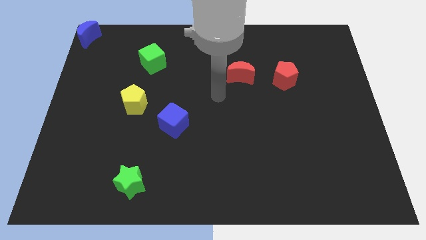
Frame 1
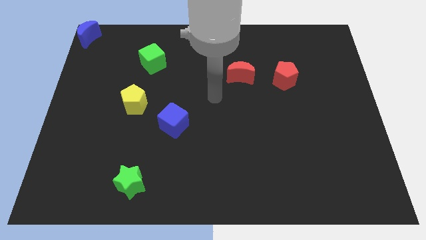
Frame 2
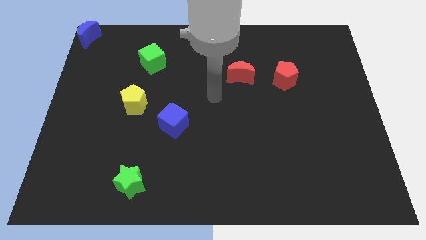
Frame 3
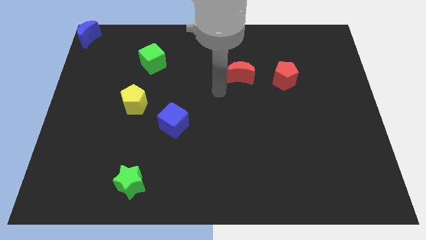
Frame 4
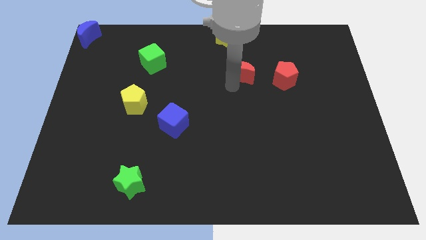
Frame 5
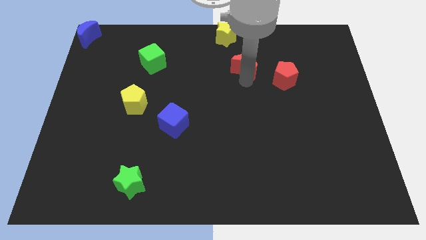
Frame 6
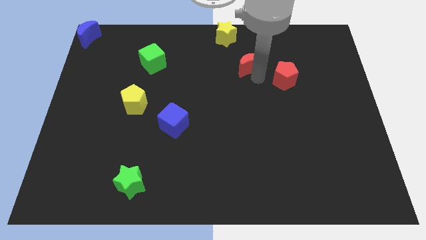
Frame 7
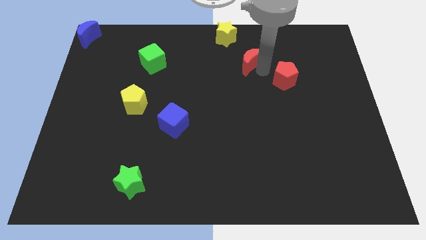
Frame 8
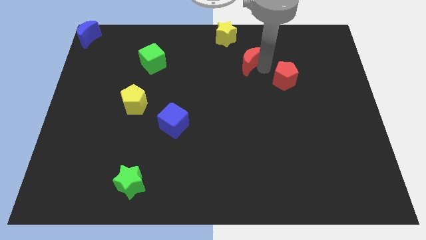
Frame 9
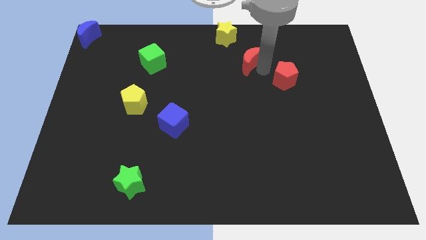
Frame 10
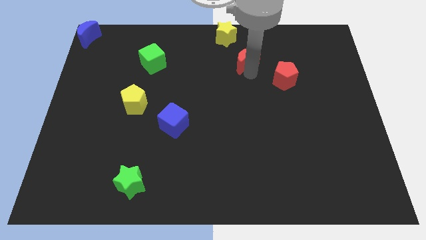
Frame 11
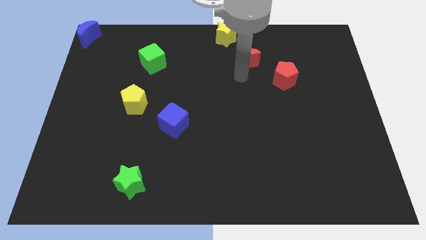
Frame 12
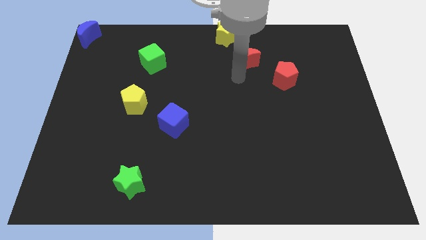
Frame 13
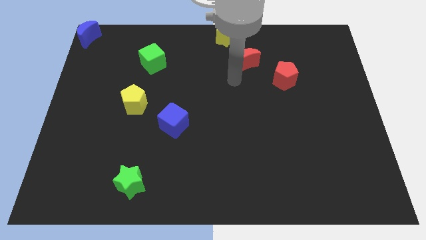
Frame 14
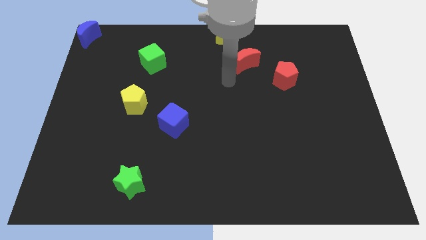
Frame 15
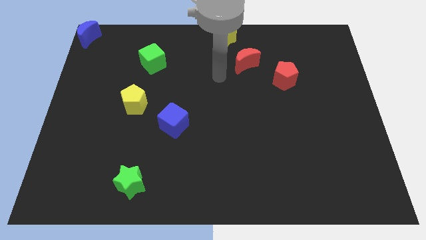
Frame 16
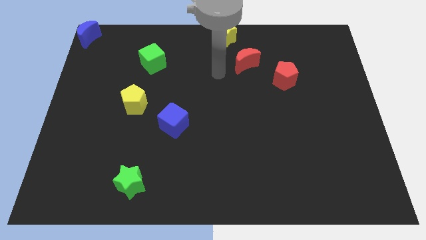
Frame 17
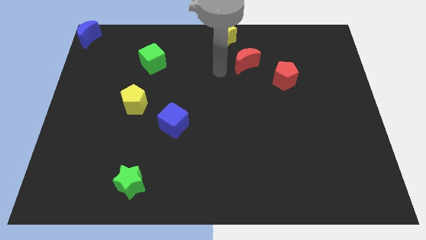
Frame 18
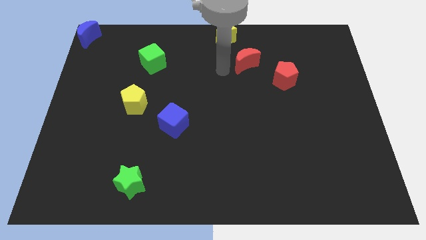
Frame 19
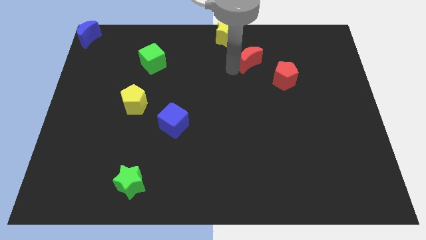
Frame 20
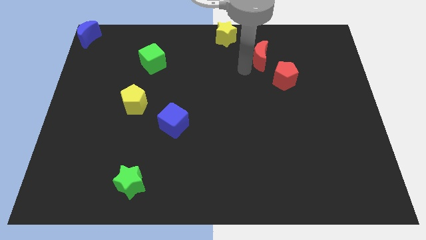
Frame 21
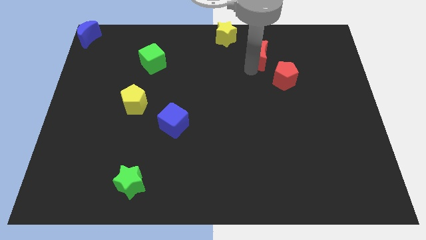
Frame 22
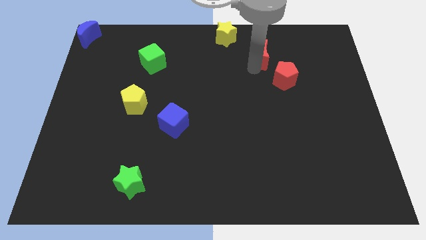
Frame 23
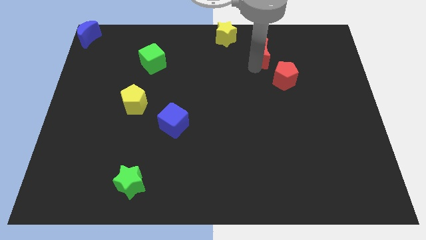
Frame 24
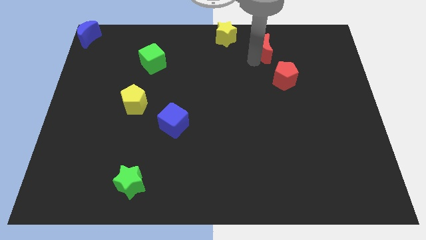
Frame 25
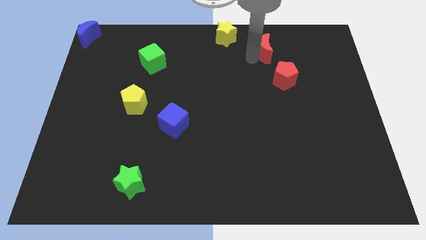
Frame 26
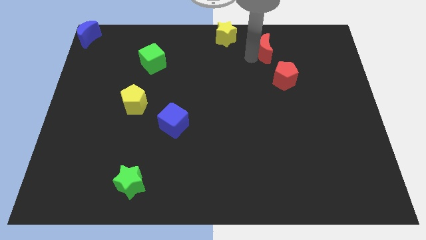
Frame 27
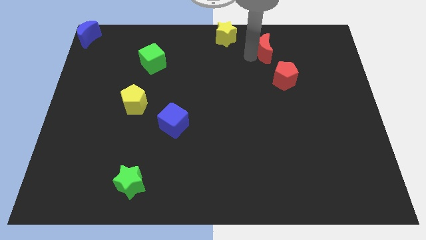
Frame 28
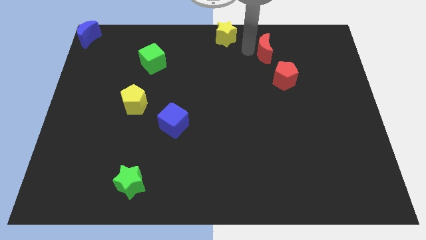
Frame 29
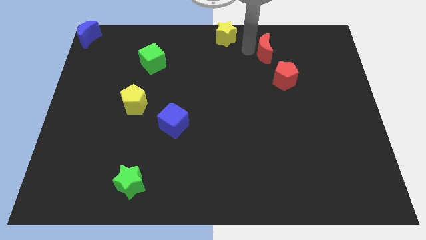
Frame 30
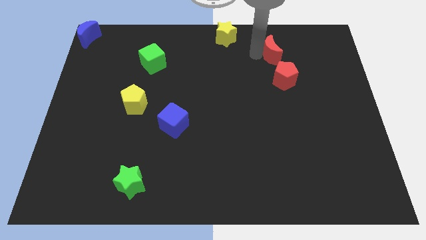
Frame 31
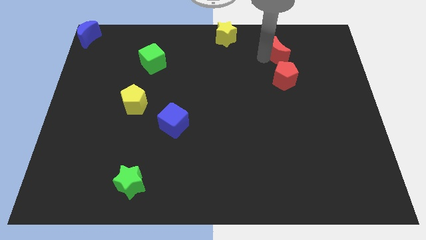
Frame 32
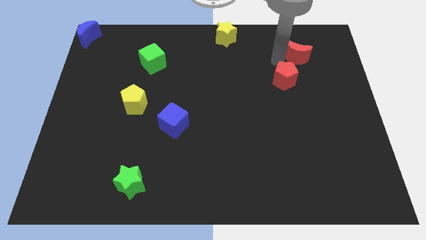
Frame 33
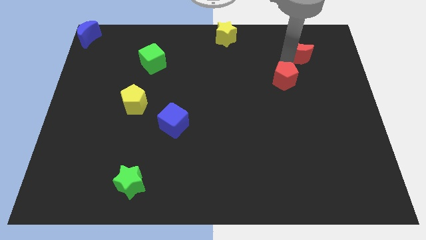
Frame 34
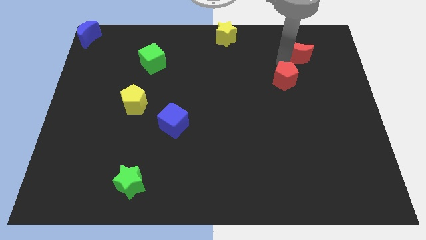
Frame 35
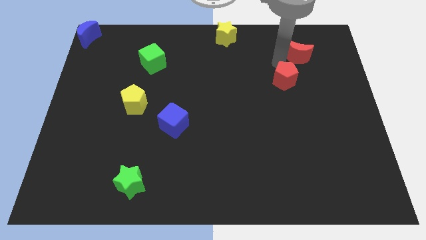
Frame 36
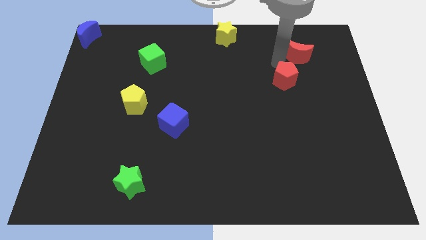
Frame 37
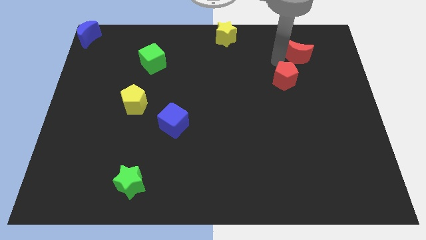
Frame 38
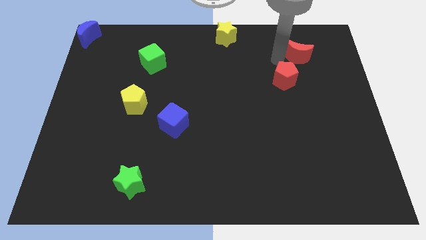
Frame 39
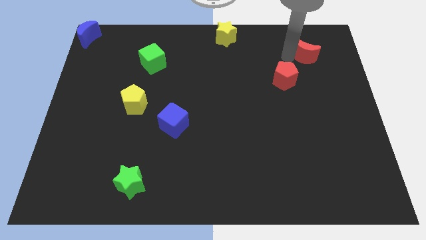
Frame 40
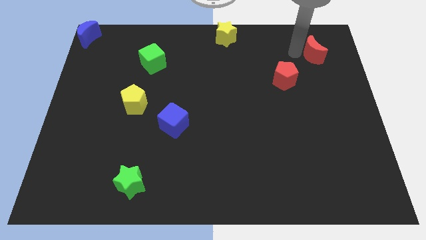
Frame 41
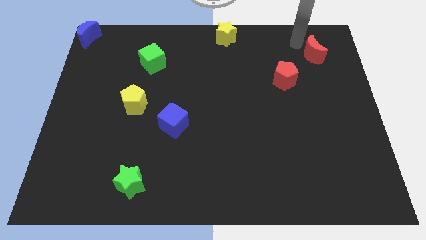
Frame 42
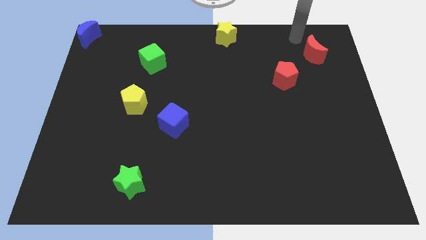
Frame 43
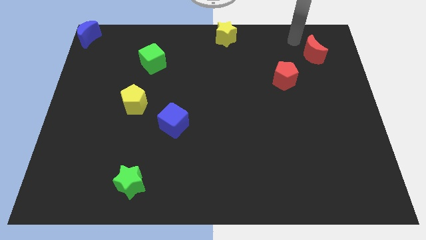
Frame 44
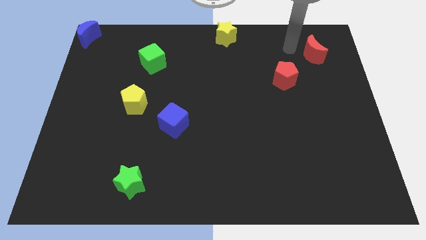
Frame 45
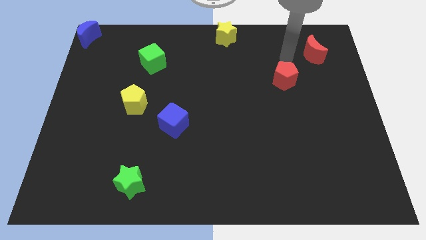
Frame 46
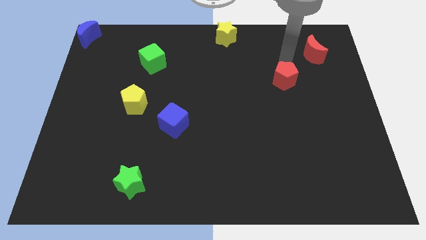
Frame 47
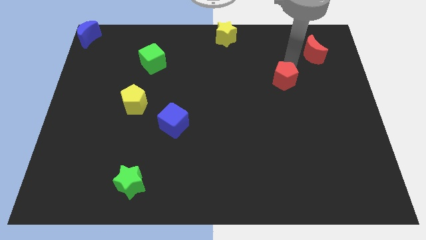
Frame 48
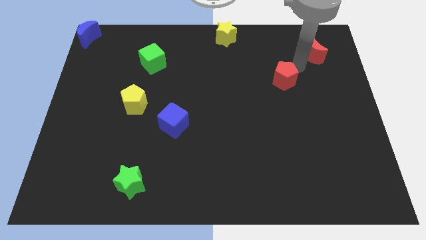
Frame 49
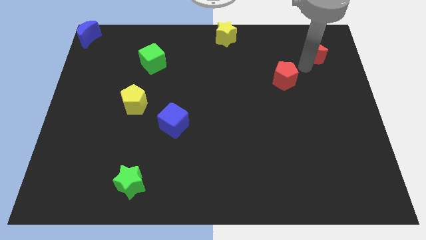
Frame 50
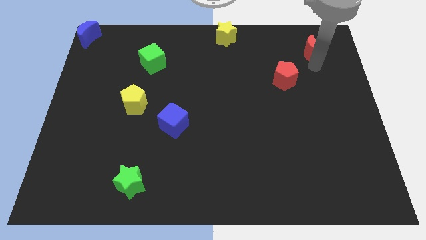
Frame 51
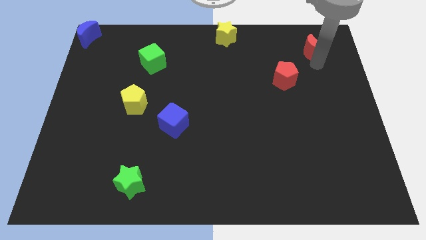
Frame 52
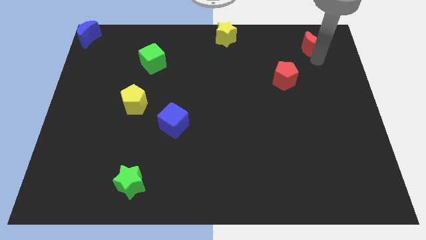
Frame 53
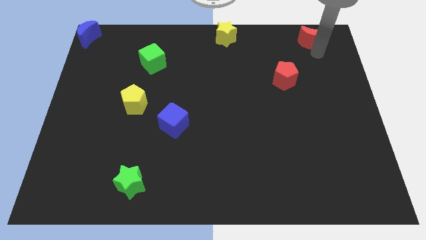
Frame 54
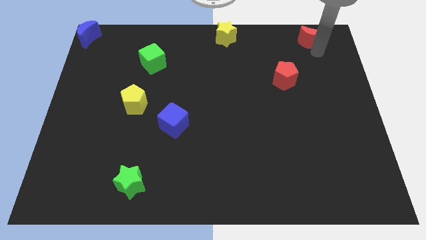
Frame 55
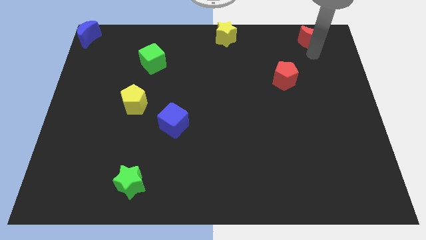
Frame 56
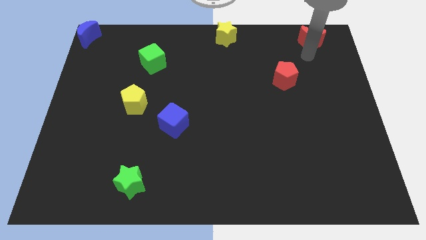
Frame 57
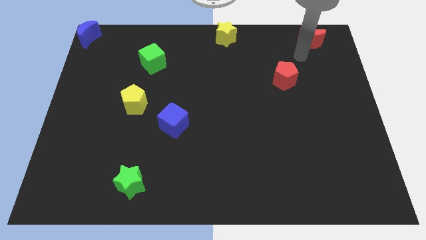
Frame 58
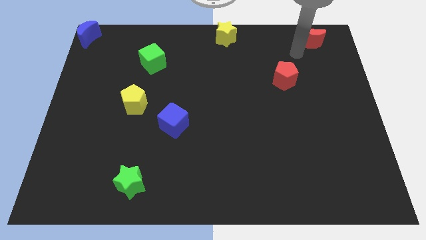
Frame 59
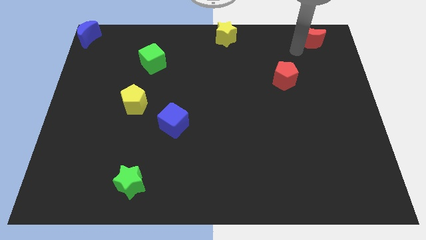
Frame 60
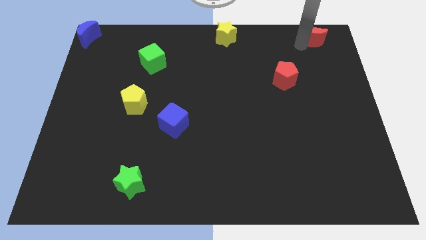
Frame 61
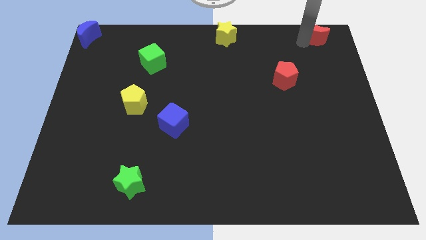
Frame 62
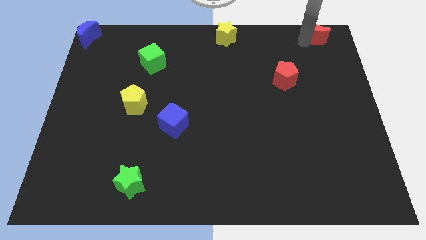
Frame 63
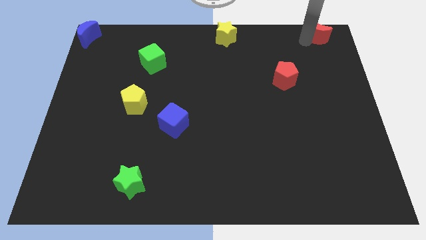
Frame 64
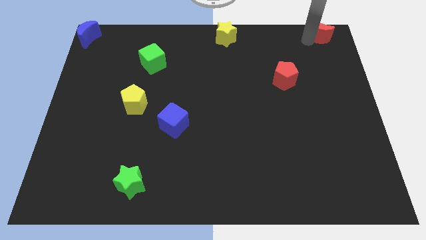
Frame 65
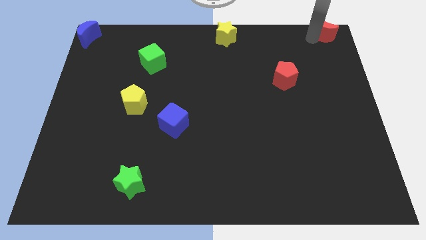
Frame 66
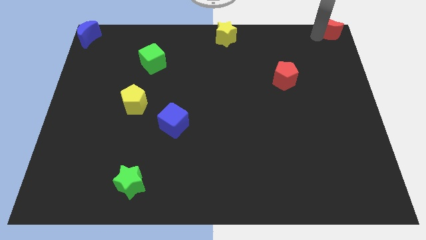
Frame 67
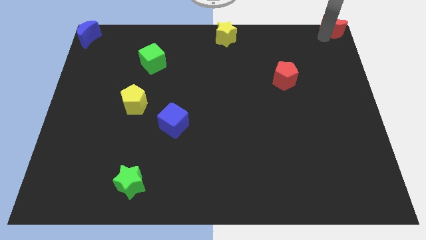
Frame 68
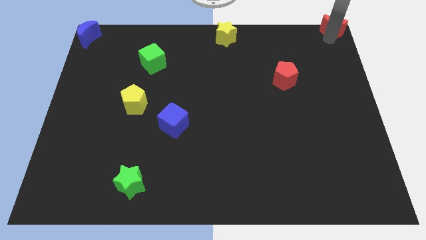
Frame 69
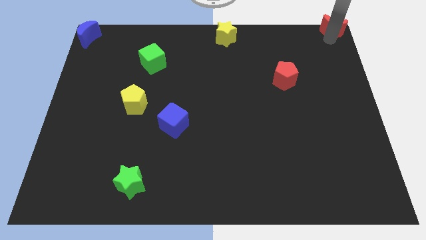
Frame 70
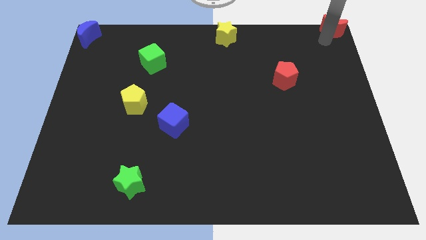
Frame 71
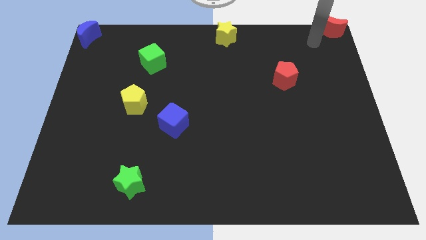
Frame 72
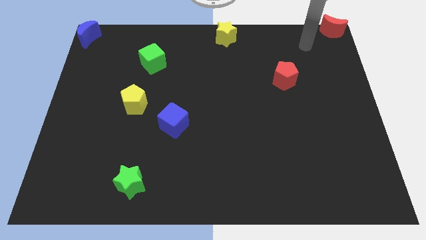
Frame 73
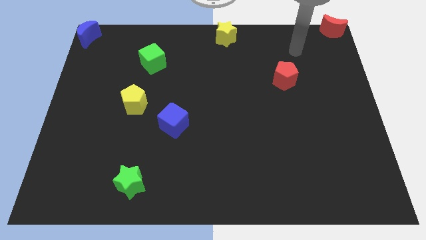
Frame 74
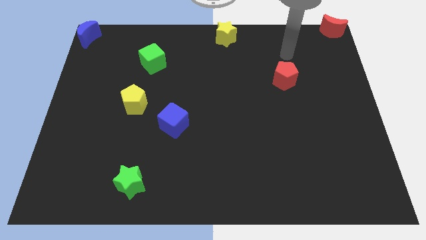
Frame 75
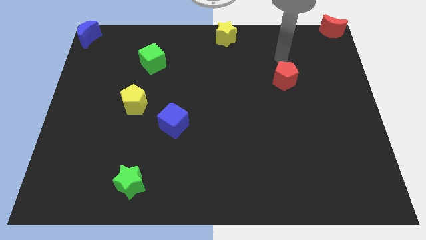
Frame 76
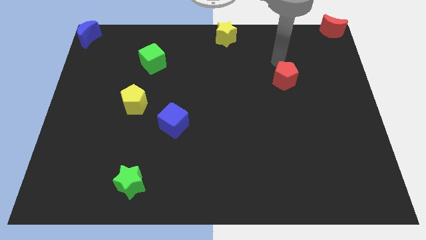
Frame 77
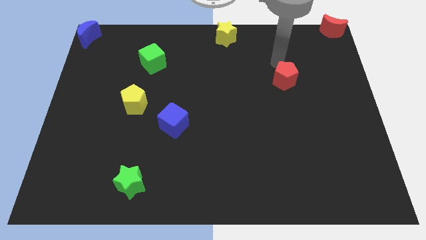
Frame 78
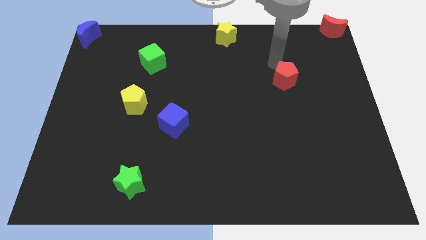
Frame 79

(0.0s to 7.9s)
move red moon to the top right corner of the board

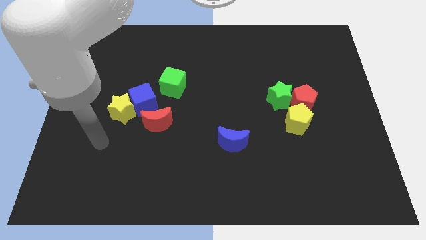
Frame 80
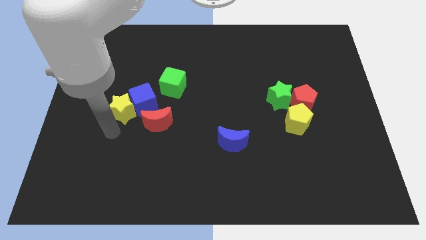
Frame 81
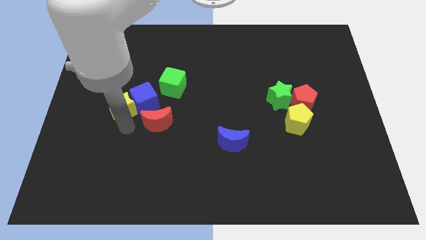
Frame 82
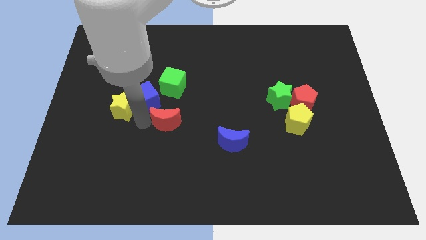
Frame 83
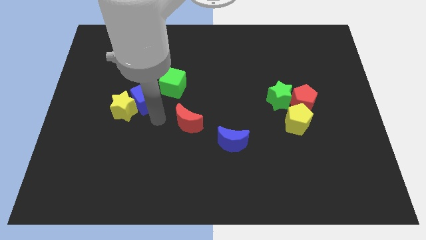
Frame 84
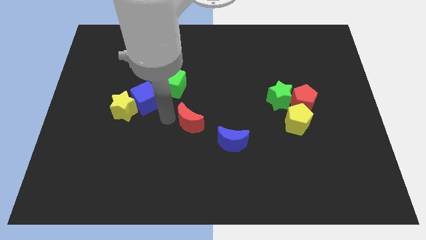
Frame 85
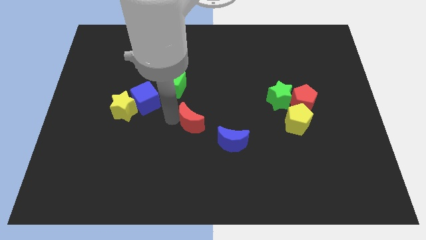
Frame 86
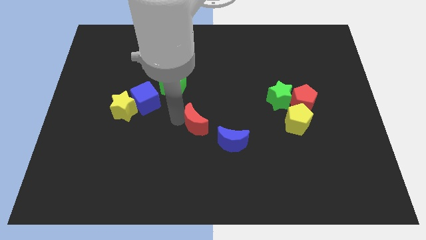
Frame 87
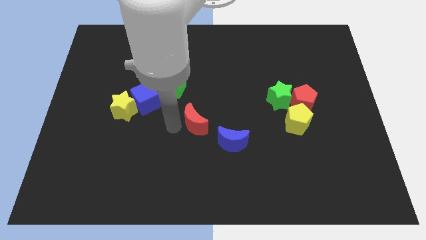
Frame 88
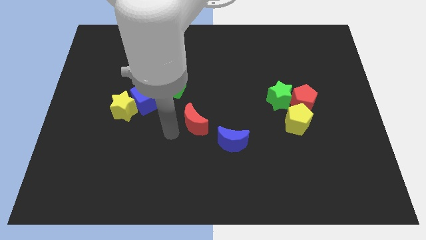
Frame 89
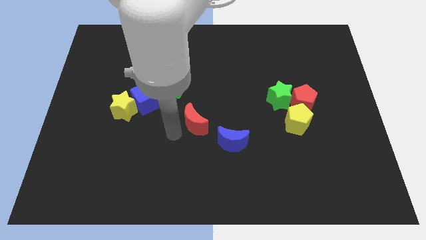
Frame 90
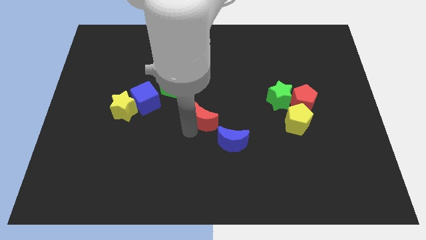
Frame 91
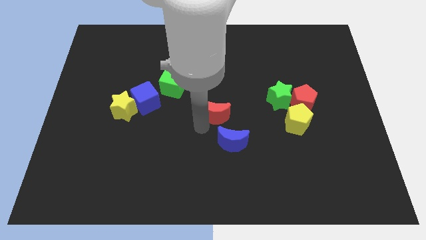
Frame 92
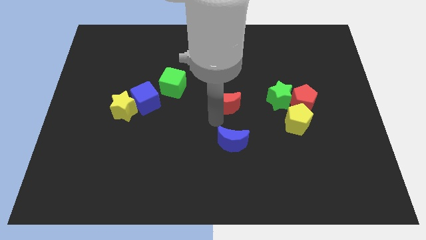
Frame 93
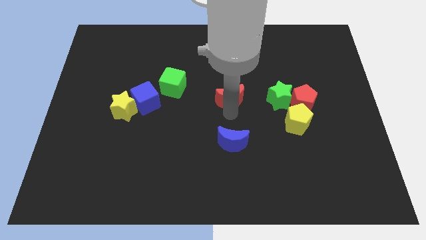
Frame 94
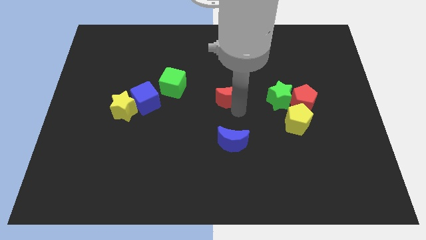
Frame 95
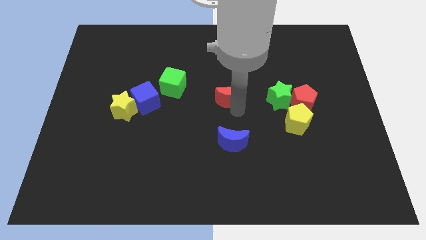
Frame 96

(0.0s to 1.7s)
move the red crescent to the top of the blue moon
